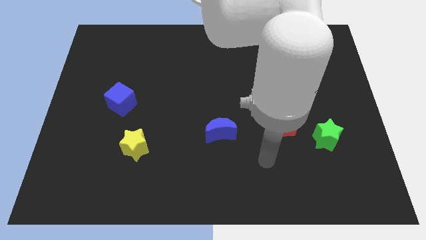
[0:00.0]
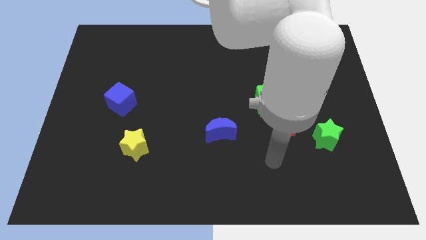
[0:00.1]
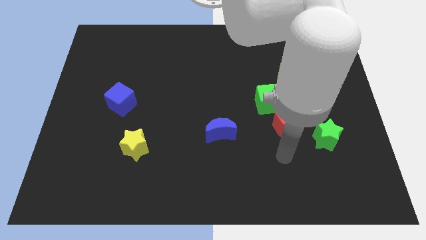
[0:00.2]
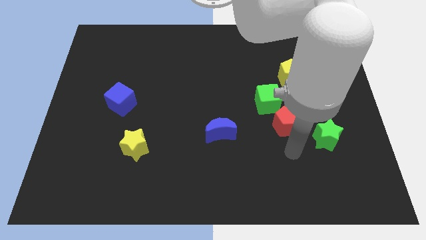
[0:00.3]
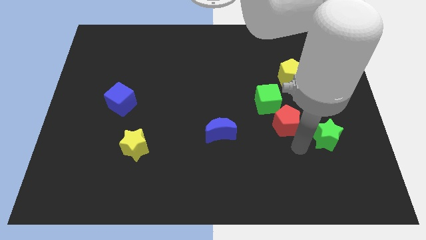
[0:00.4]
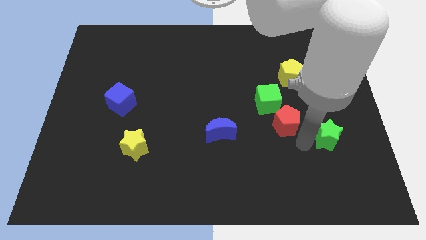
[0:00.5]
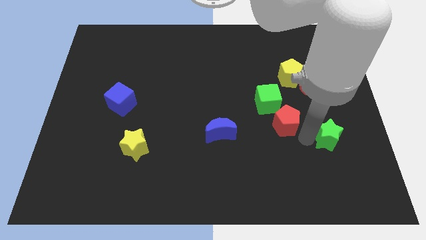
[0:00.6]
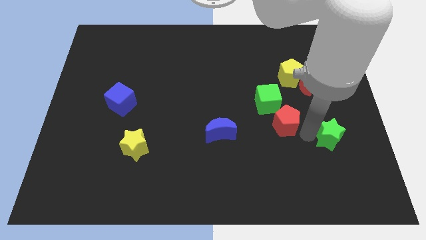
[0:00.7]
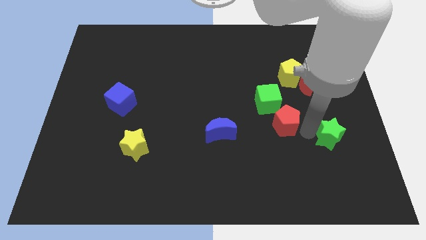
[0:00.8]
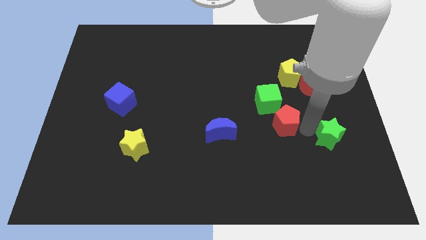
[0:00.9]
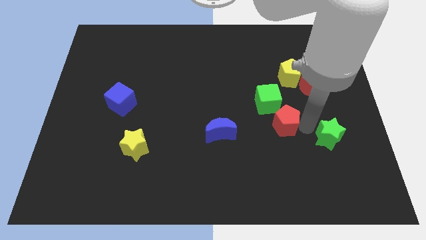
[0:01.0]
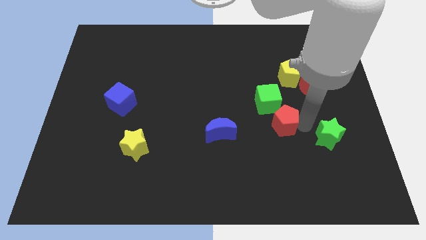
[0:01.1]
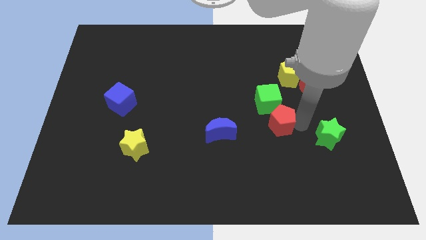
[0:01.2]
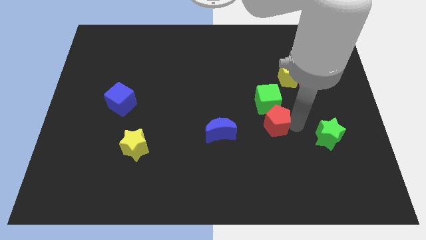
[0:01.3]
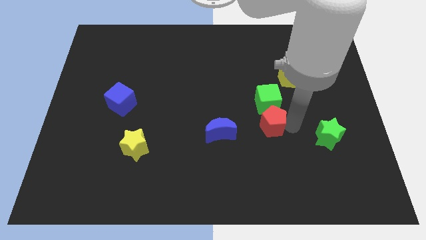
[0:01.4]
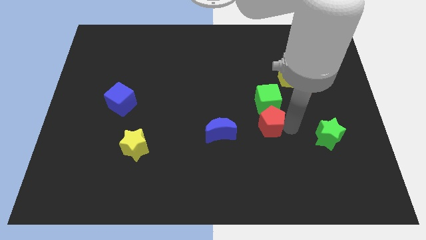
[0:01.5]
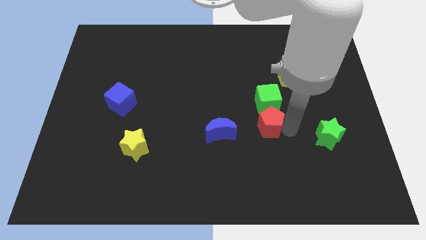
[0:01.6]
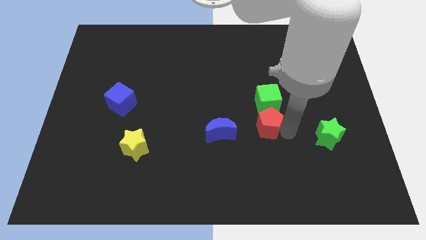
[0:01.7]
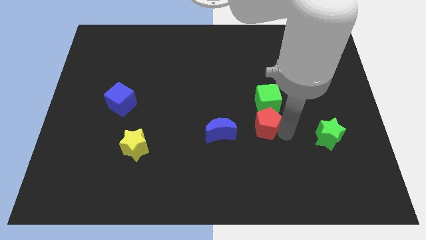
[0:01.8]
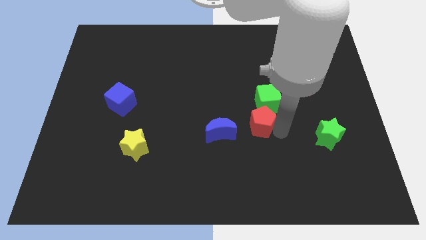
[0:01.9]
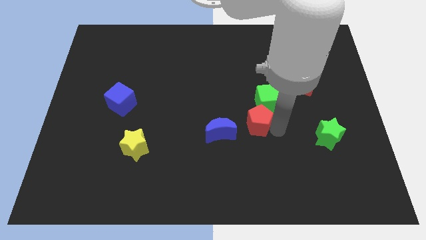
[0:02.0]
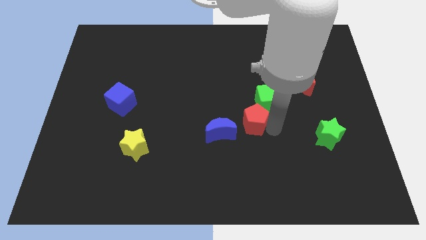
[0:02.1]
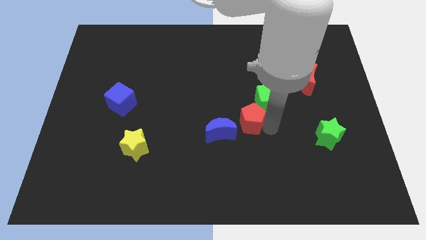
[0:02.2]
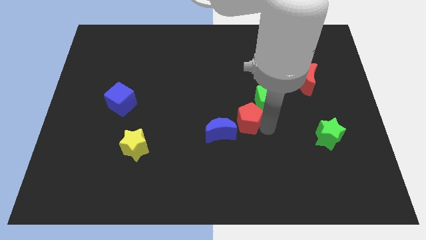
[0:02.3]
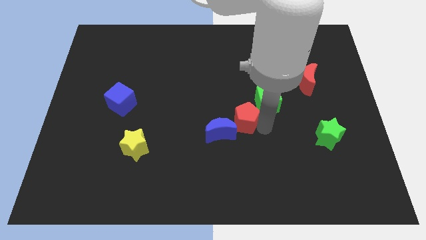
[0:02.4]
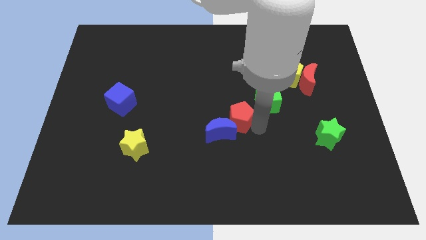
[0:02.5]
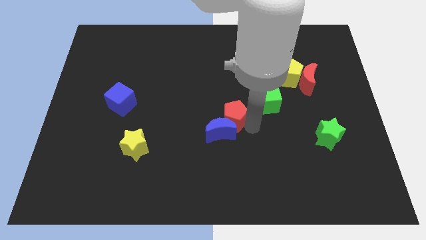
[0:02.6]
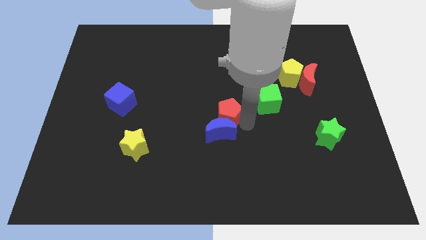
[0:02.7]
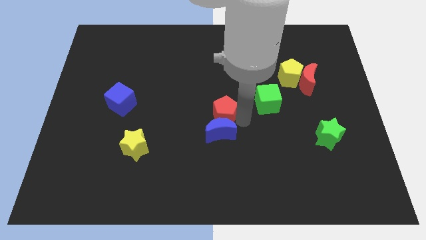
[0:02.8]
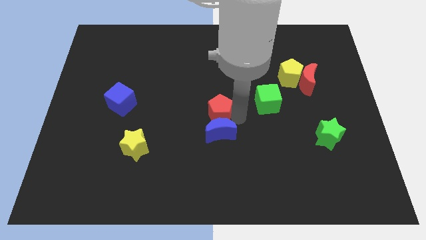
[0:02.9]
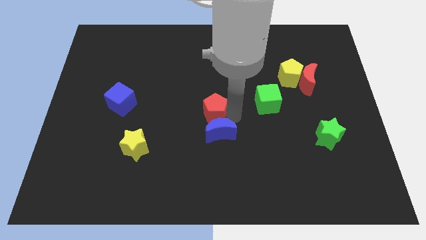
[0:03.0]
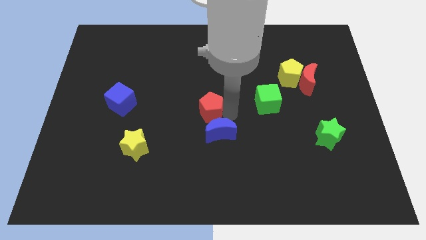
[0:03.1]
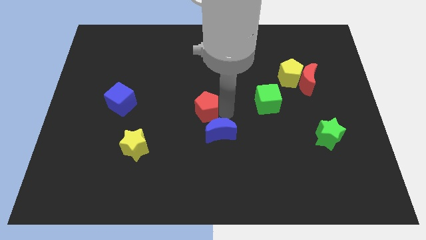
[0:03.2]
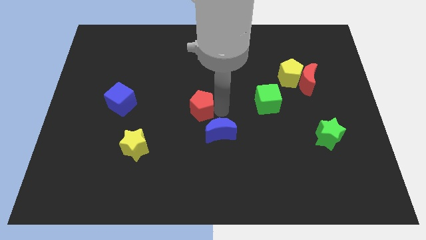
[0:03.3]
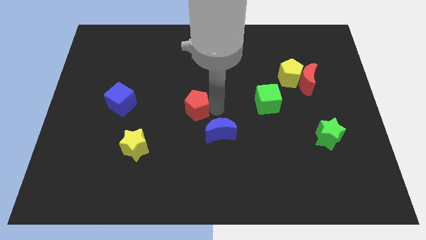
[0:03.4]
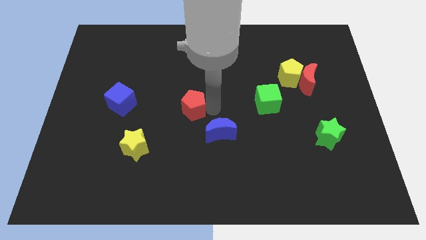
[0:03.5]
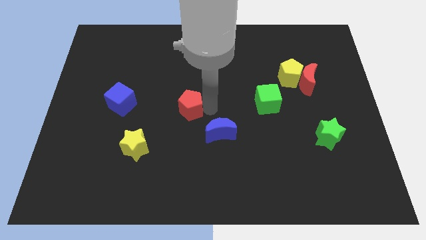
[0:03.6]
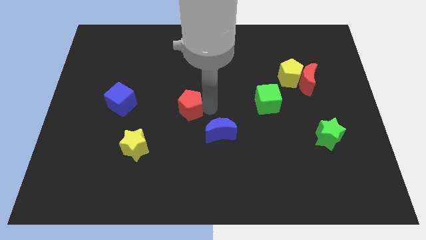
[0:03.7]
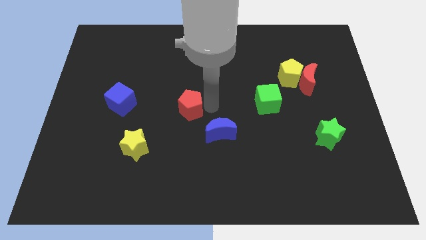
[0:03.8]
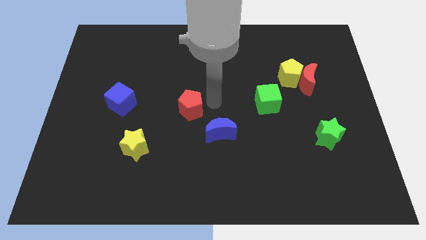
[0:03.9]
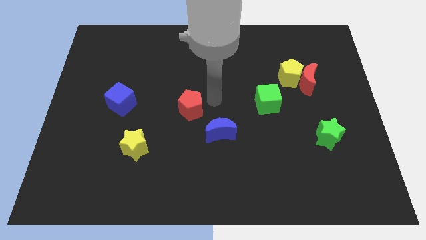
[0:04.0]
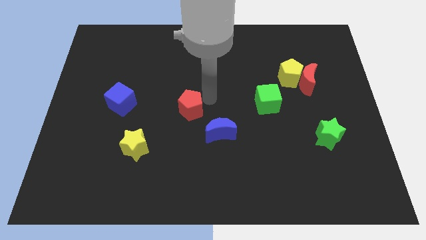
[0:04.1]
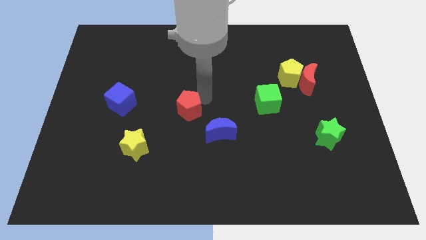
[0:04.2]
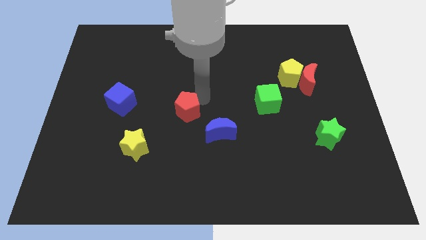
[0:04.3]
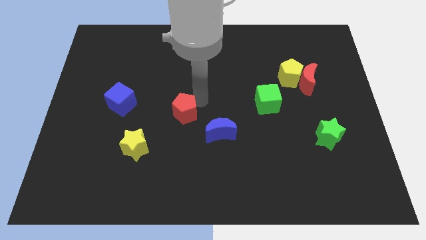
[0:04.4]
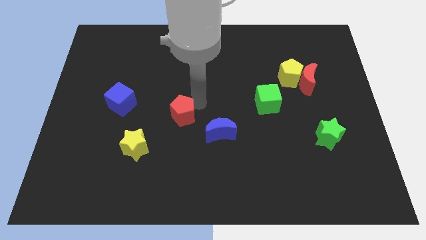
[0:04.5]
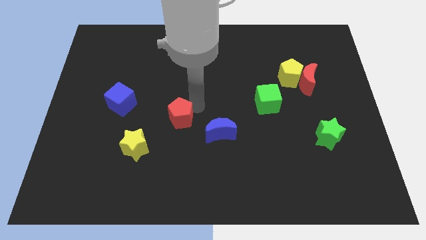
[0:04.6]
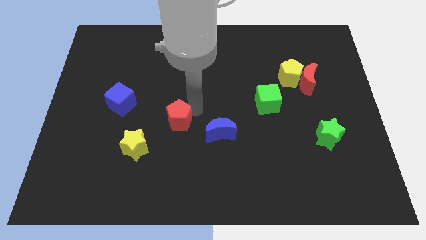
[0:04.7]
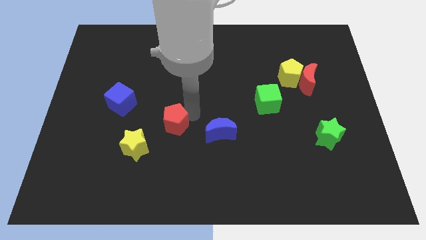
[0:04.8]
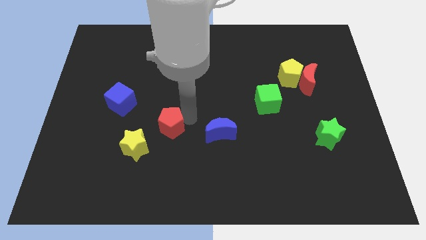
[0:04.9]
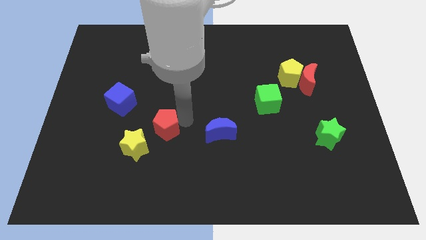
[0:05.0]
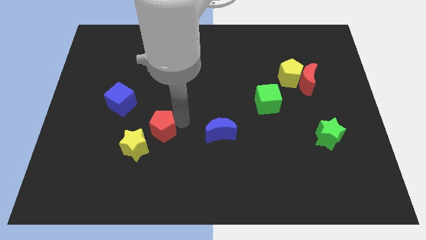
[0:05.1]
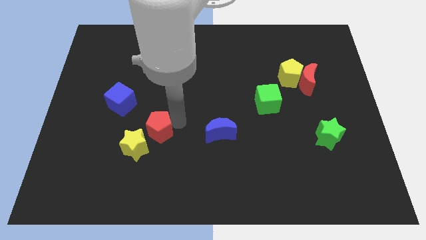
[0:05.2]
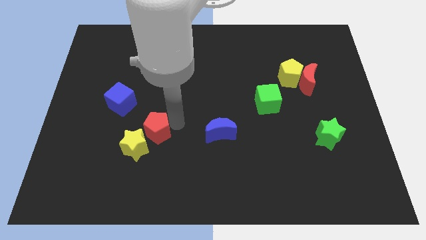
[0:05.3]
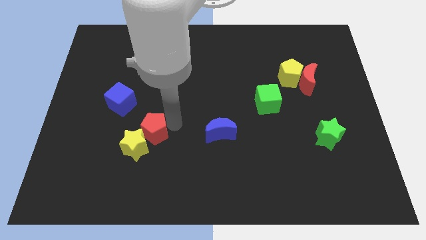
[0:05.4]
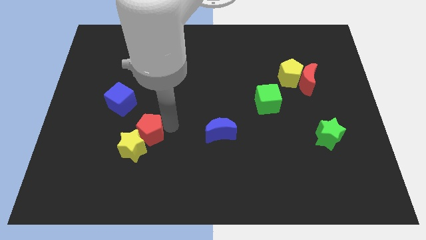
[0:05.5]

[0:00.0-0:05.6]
put the red pentagon next to the yellow star

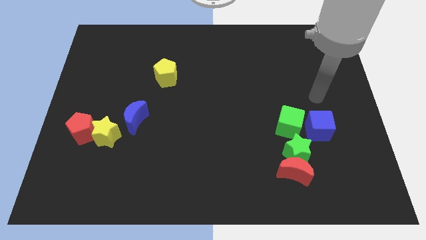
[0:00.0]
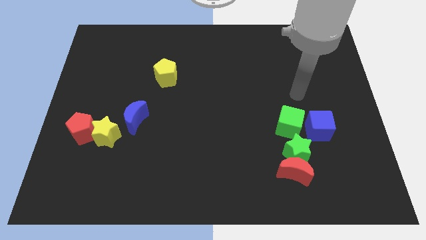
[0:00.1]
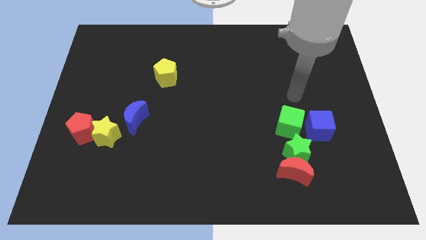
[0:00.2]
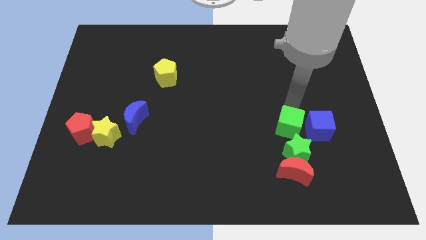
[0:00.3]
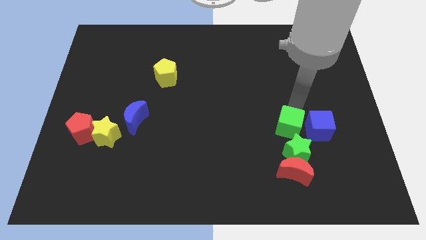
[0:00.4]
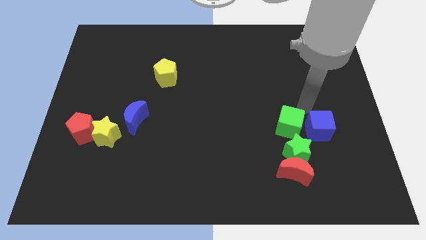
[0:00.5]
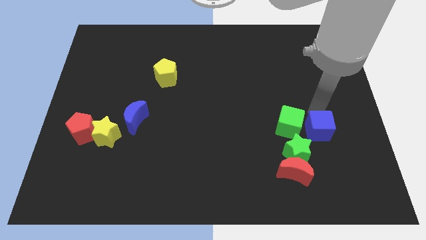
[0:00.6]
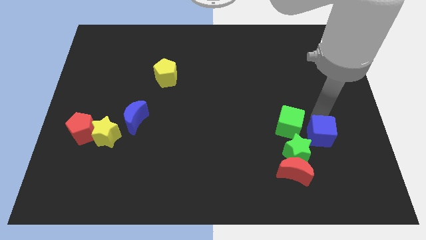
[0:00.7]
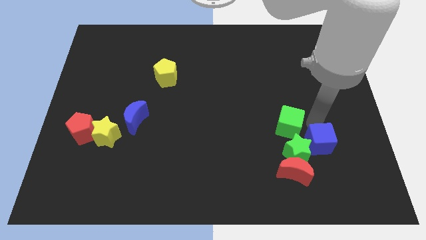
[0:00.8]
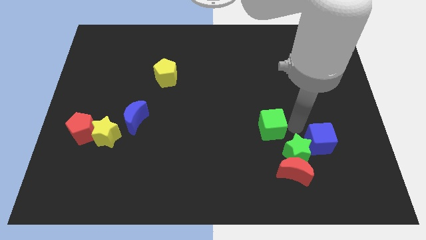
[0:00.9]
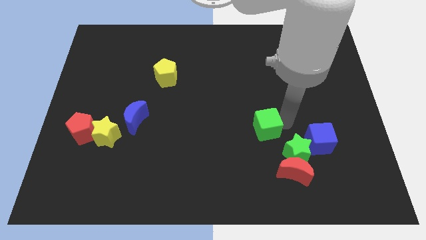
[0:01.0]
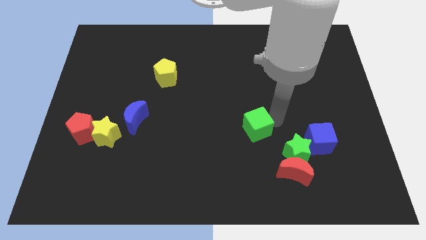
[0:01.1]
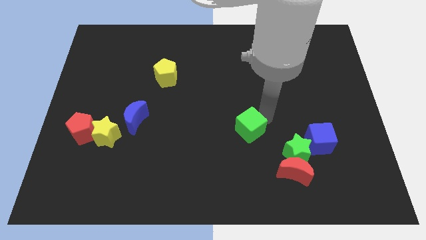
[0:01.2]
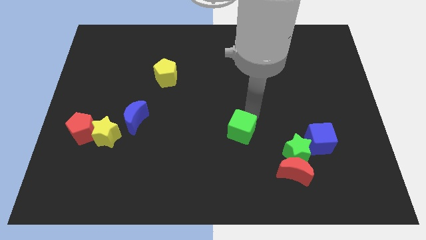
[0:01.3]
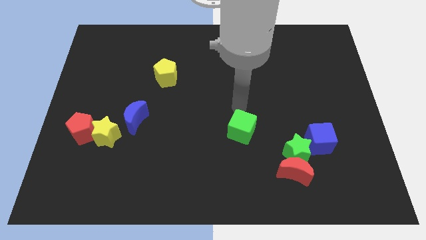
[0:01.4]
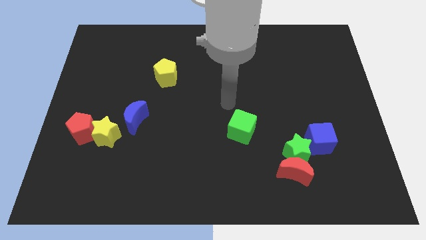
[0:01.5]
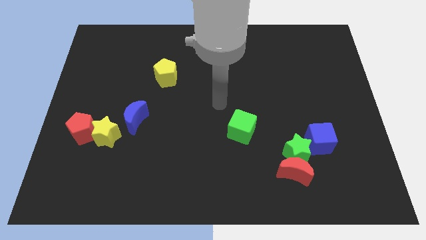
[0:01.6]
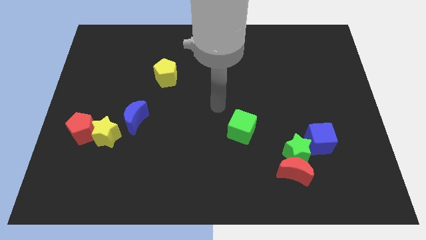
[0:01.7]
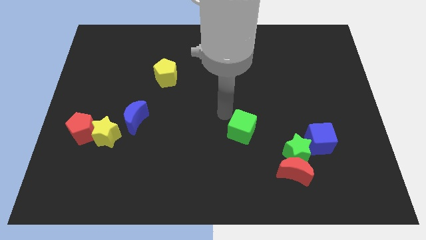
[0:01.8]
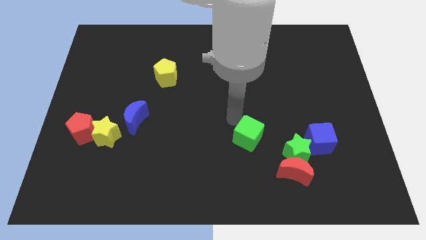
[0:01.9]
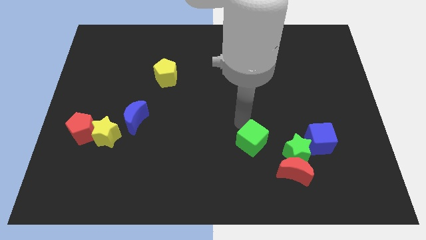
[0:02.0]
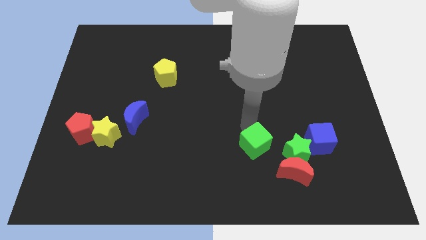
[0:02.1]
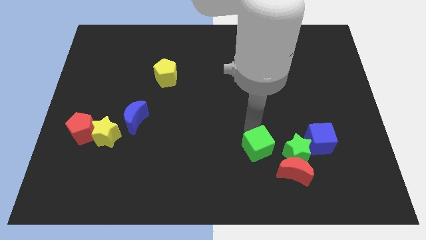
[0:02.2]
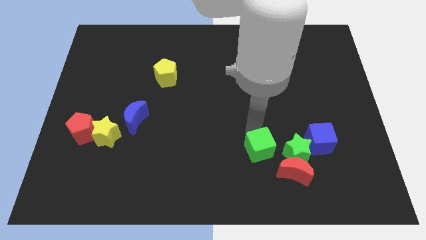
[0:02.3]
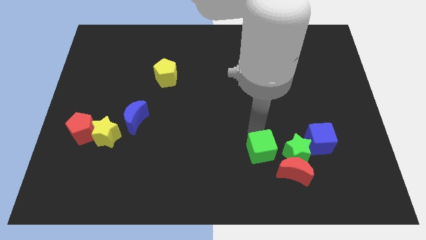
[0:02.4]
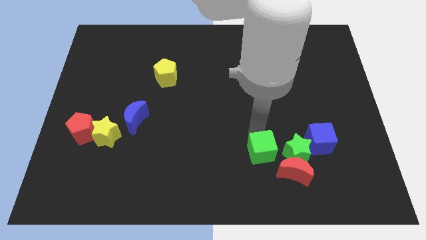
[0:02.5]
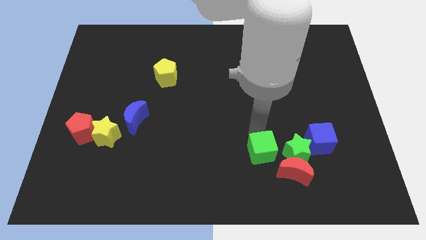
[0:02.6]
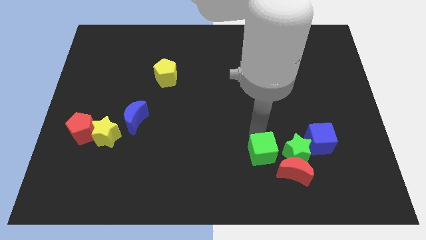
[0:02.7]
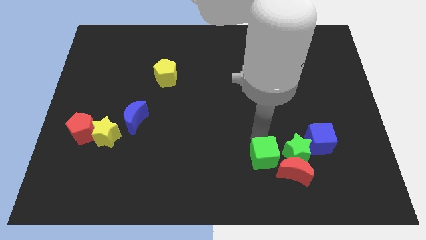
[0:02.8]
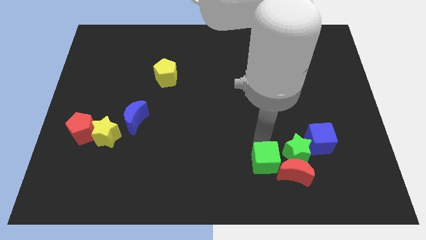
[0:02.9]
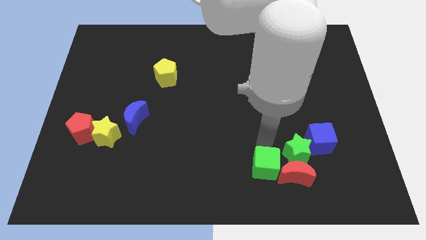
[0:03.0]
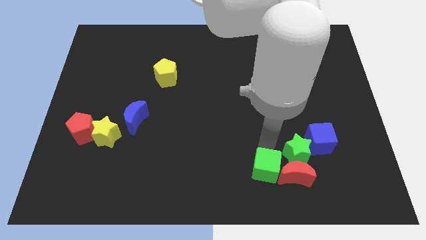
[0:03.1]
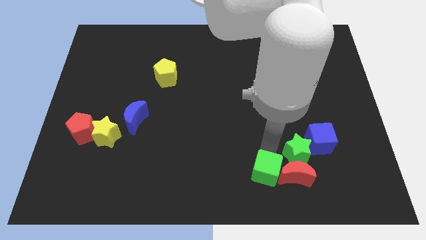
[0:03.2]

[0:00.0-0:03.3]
push the green cube close to the red moon
